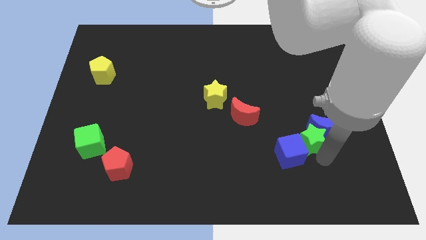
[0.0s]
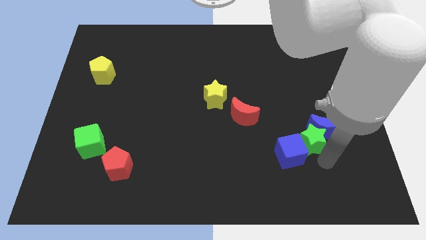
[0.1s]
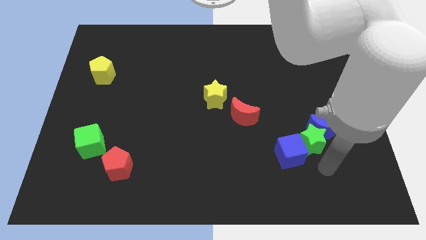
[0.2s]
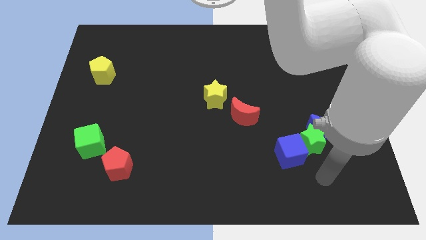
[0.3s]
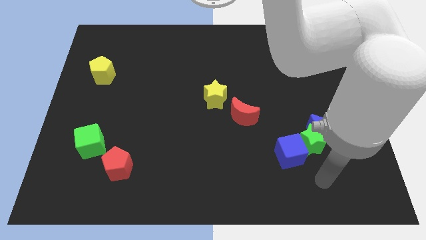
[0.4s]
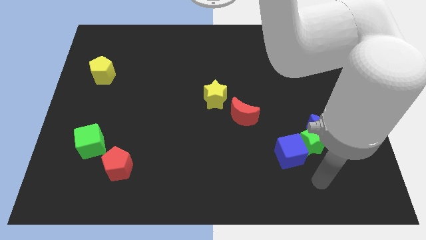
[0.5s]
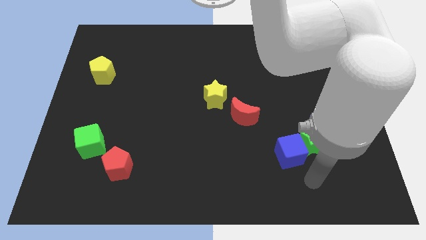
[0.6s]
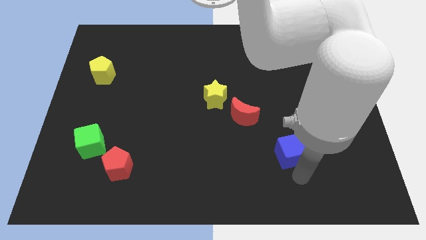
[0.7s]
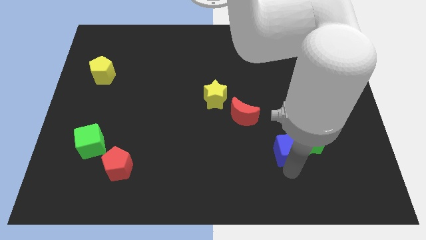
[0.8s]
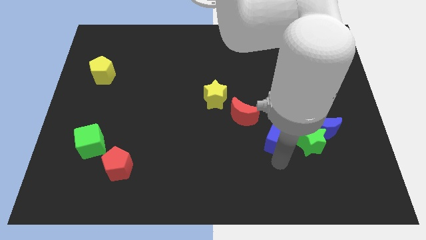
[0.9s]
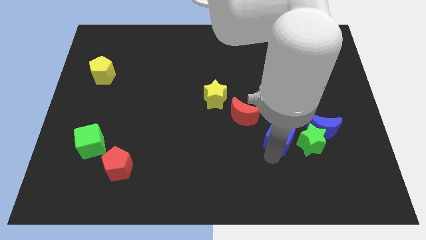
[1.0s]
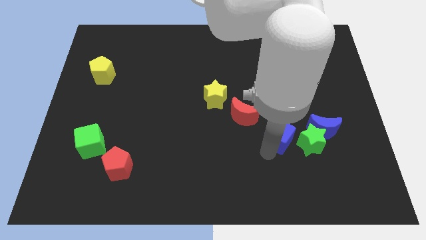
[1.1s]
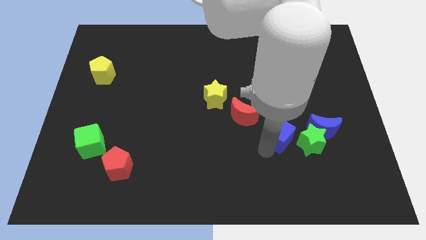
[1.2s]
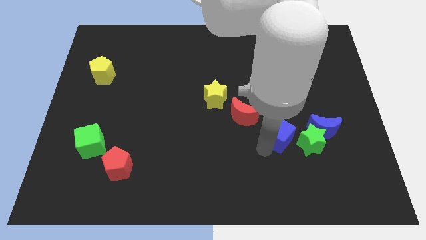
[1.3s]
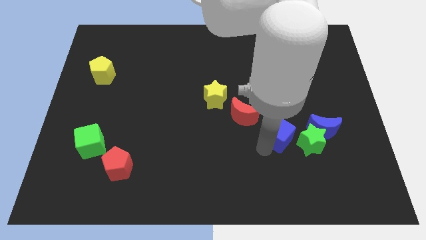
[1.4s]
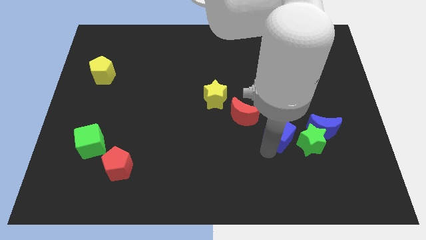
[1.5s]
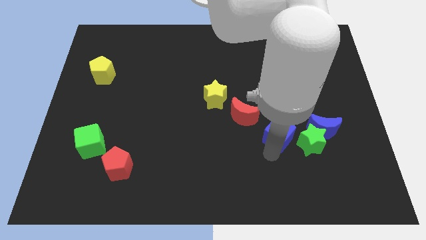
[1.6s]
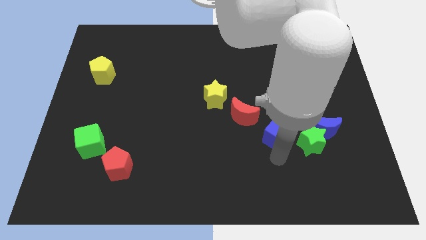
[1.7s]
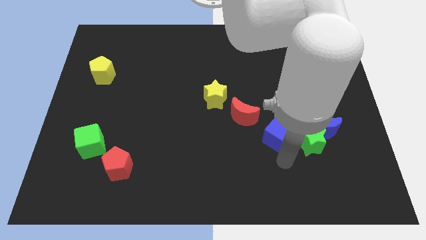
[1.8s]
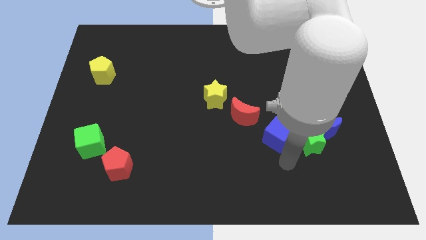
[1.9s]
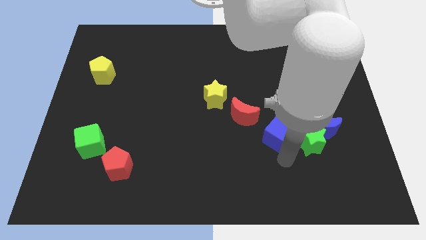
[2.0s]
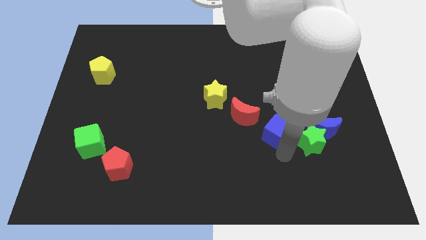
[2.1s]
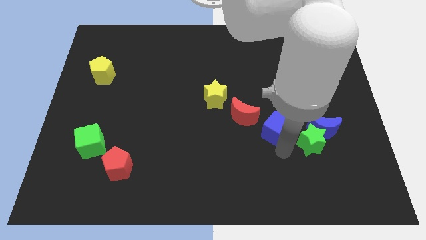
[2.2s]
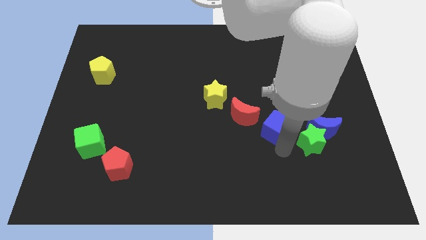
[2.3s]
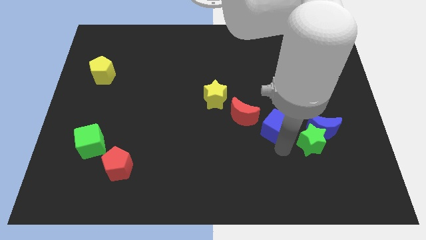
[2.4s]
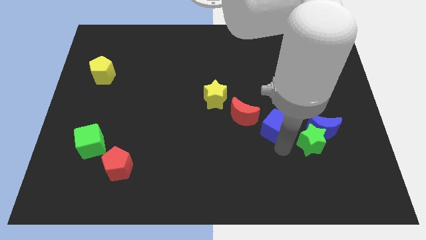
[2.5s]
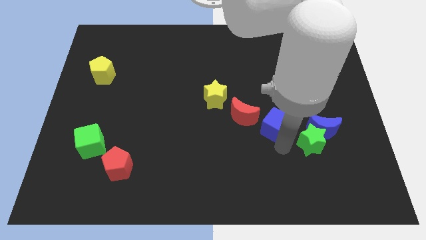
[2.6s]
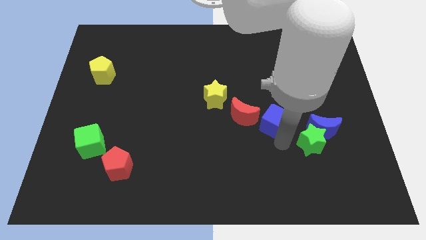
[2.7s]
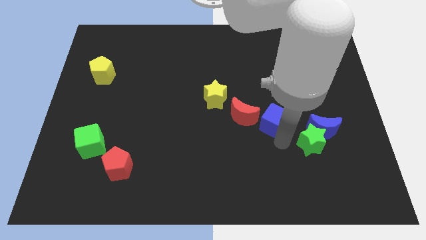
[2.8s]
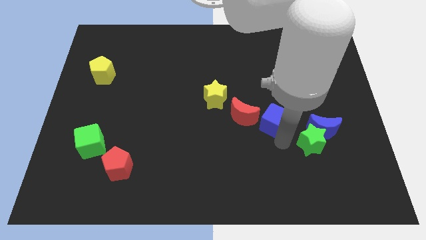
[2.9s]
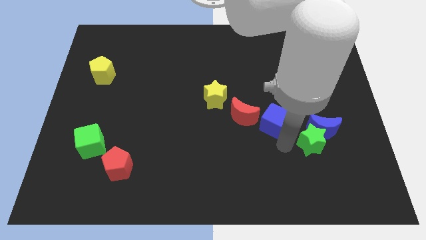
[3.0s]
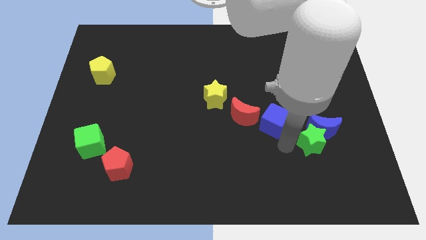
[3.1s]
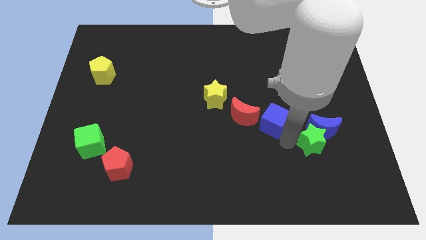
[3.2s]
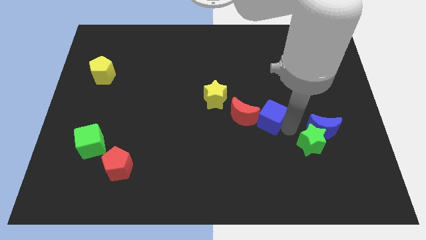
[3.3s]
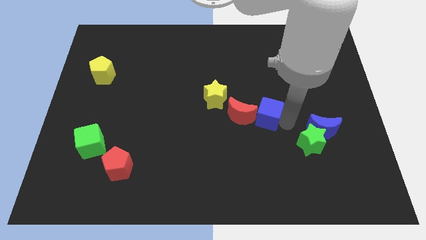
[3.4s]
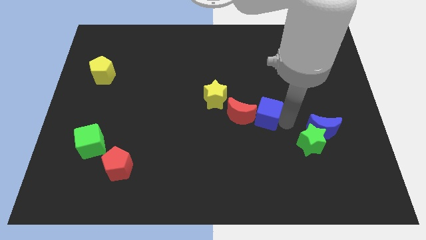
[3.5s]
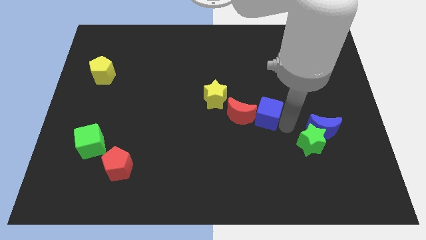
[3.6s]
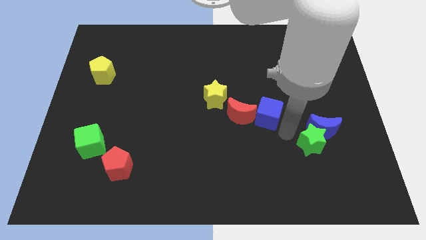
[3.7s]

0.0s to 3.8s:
place the blue cube to the right of the red crescent

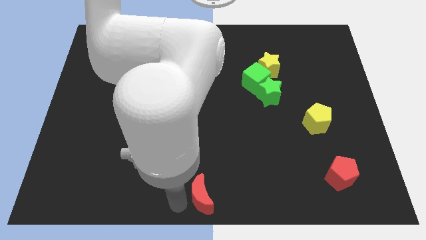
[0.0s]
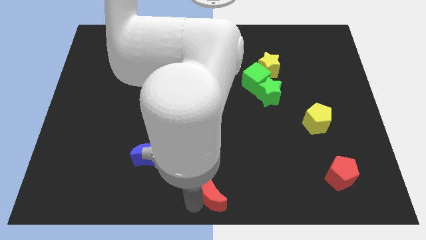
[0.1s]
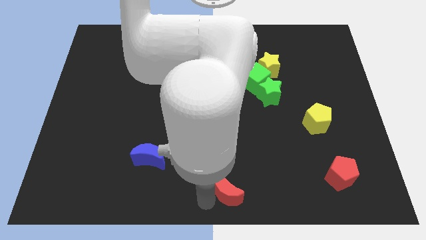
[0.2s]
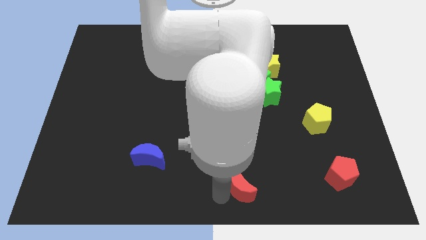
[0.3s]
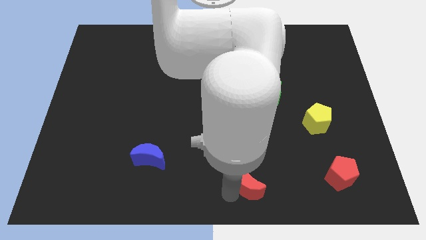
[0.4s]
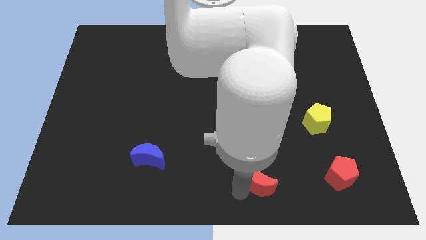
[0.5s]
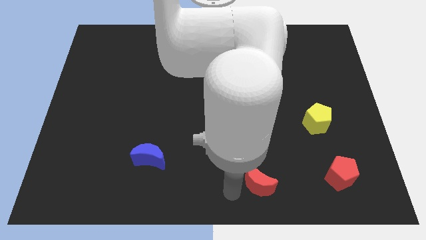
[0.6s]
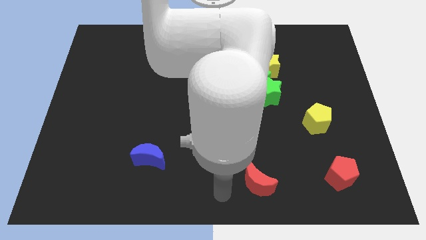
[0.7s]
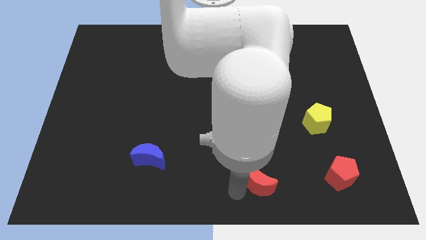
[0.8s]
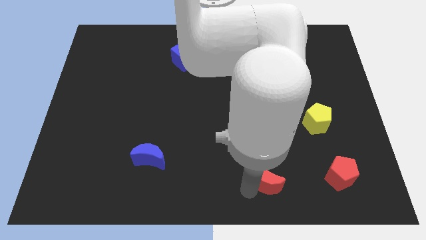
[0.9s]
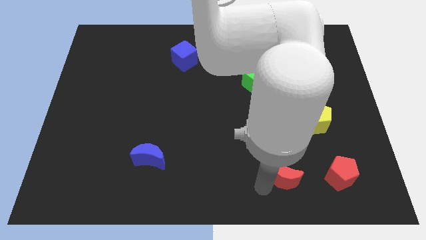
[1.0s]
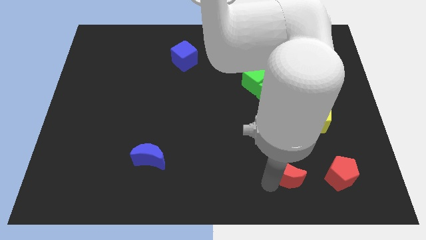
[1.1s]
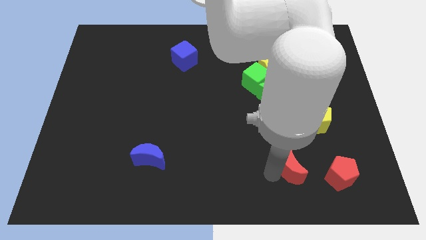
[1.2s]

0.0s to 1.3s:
move red moon towards red pentagon

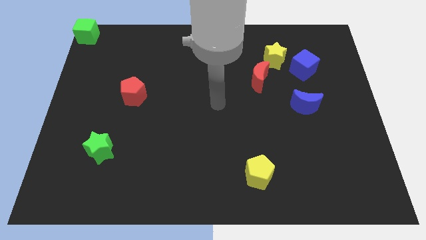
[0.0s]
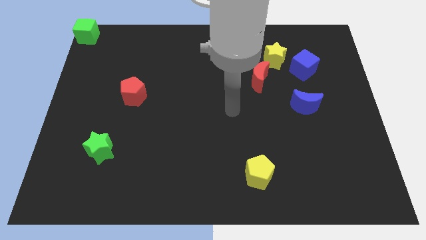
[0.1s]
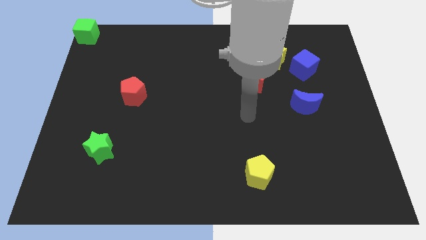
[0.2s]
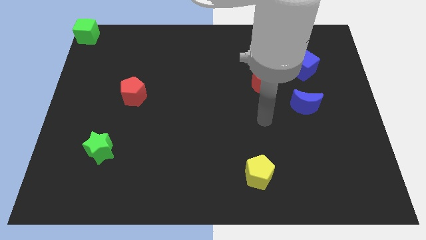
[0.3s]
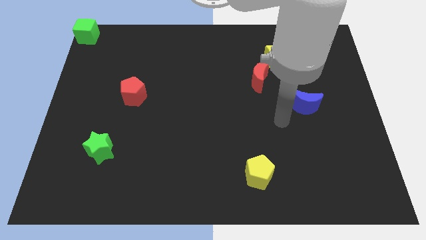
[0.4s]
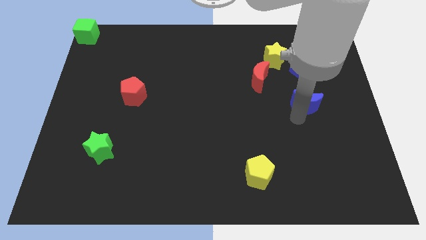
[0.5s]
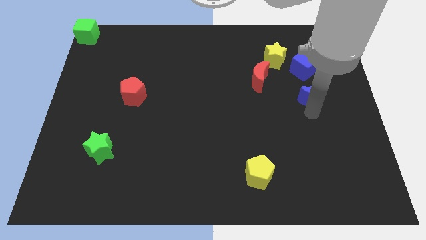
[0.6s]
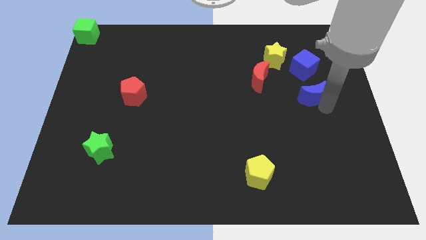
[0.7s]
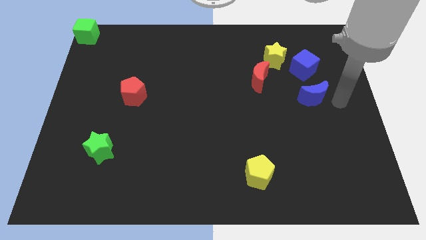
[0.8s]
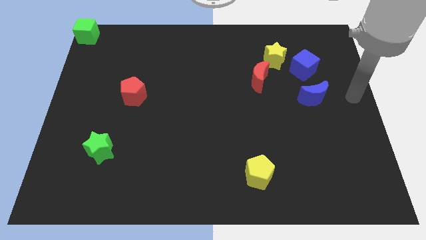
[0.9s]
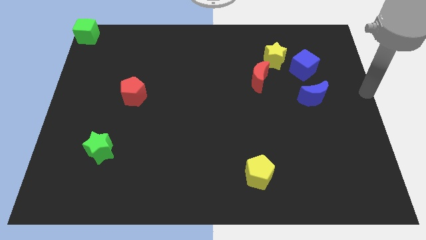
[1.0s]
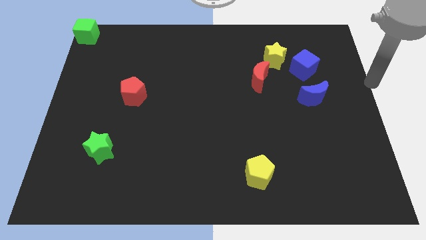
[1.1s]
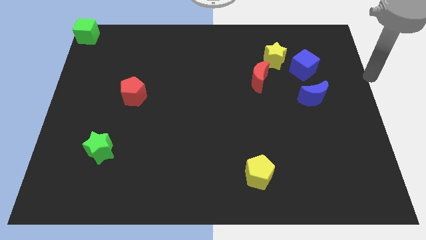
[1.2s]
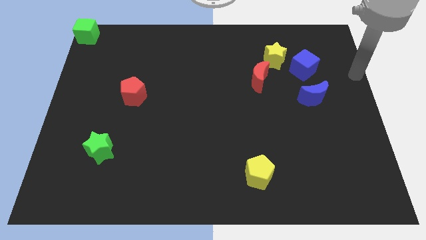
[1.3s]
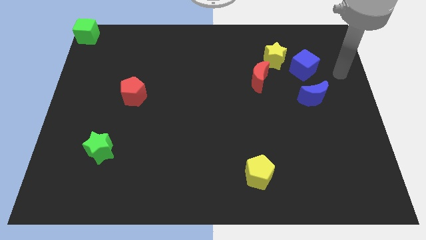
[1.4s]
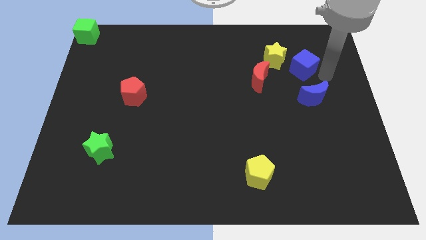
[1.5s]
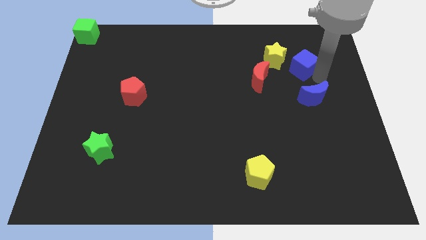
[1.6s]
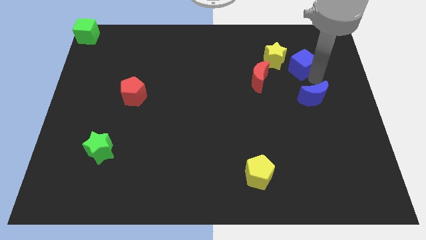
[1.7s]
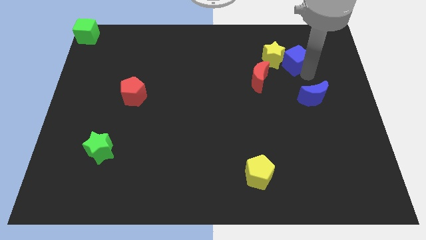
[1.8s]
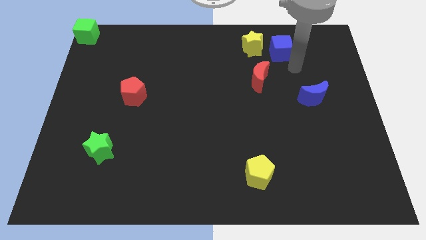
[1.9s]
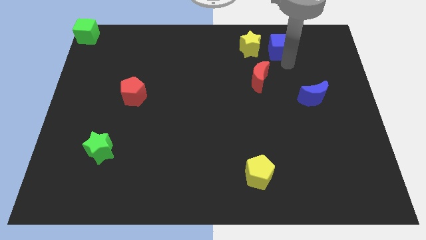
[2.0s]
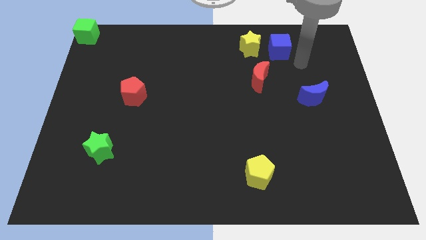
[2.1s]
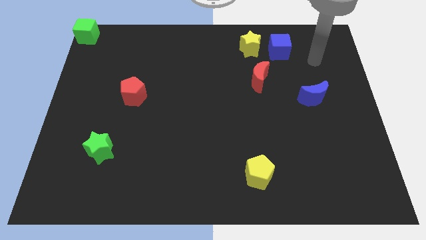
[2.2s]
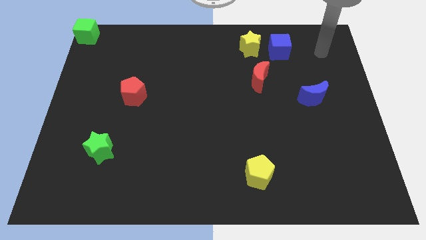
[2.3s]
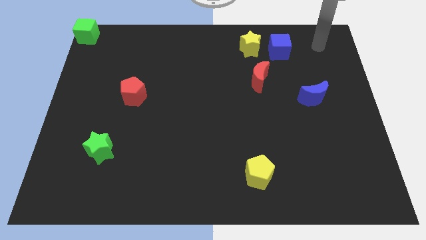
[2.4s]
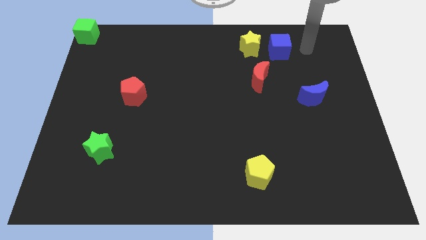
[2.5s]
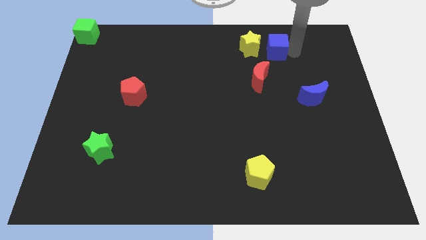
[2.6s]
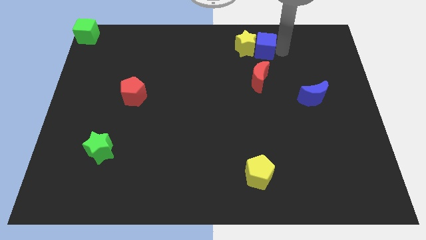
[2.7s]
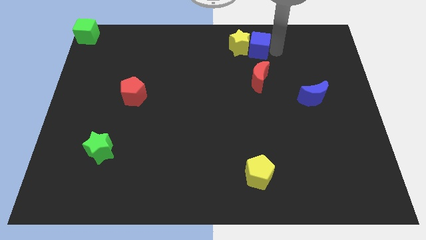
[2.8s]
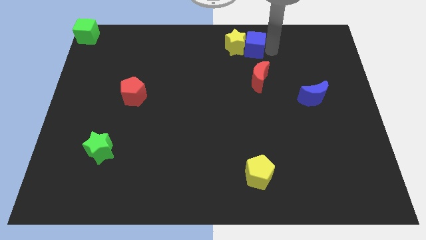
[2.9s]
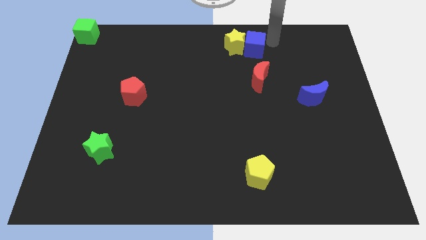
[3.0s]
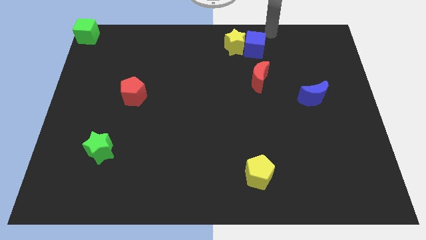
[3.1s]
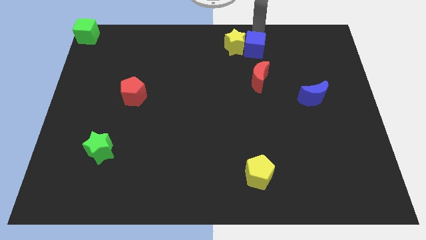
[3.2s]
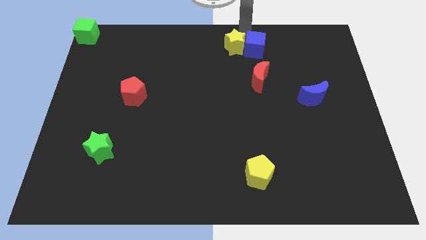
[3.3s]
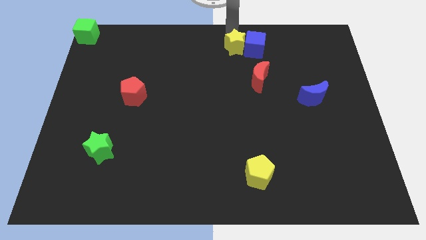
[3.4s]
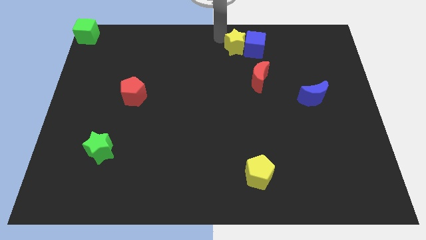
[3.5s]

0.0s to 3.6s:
move the blue cube into the yellow star

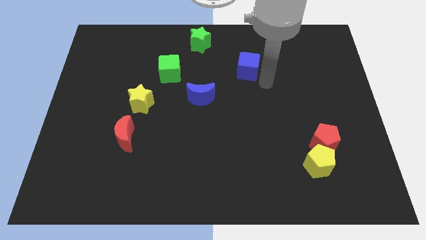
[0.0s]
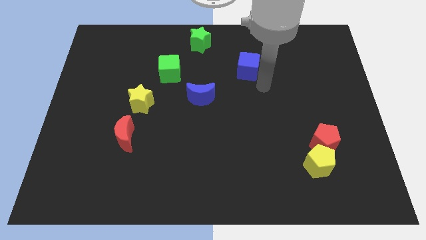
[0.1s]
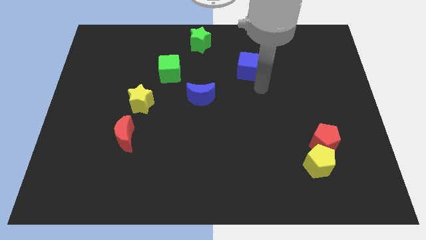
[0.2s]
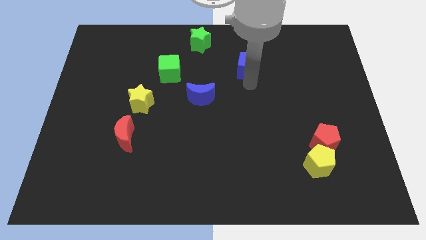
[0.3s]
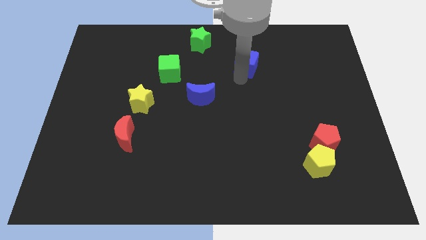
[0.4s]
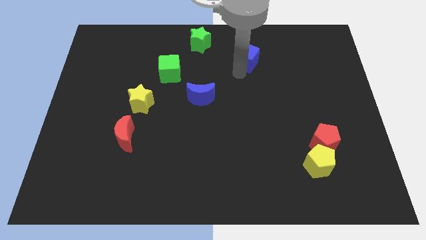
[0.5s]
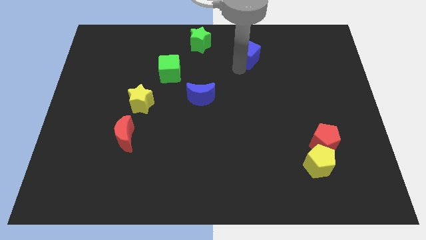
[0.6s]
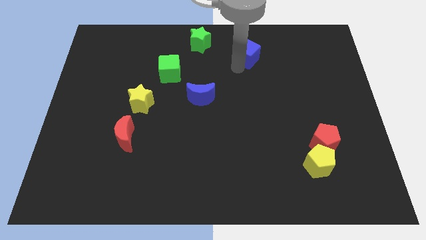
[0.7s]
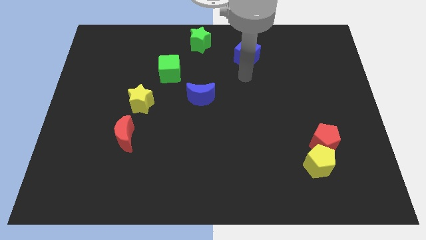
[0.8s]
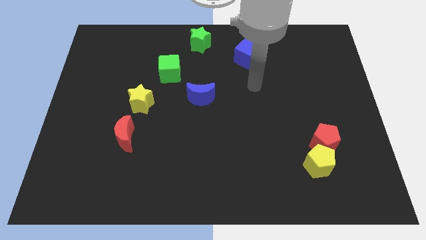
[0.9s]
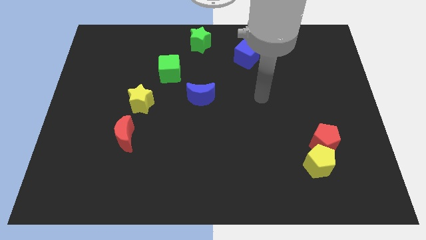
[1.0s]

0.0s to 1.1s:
slightly move blue cube to the top of the board
